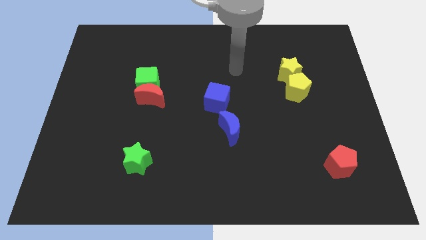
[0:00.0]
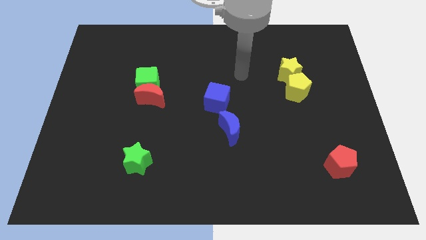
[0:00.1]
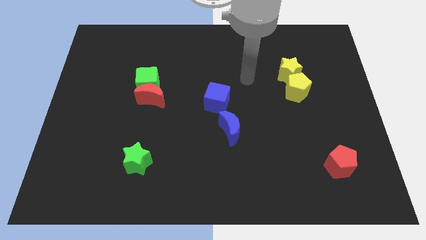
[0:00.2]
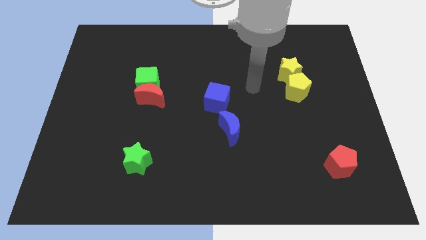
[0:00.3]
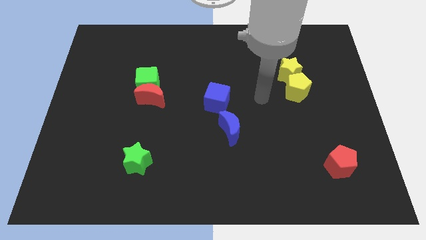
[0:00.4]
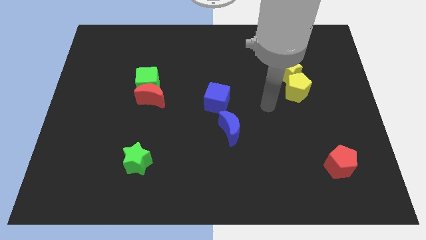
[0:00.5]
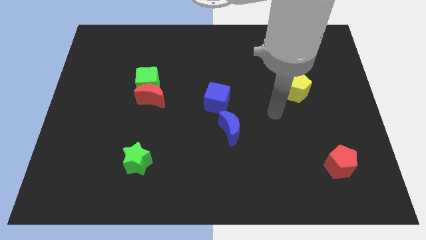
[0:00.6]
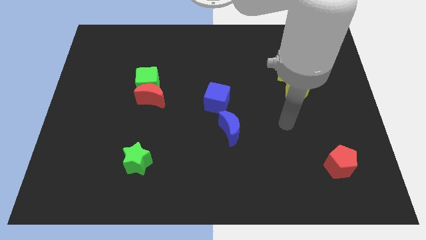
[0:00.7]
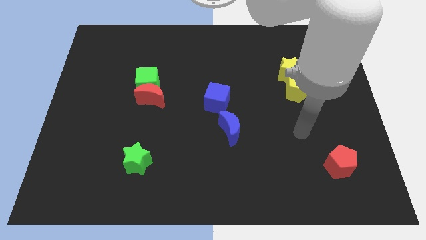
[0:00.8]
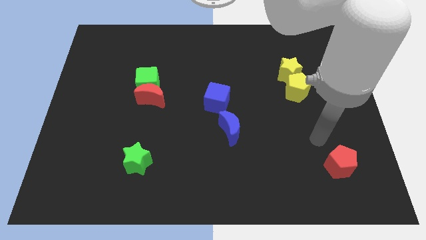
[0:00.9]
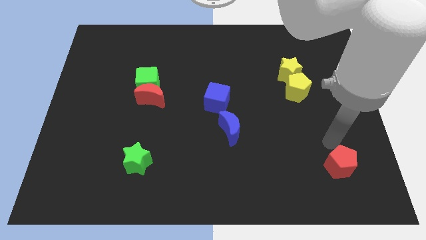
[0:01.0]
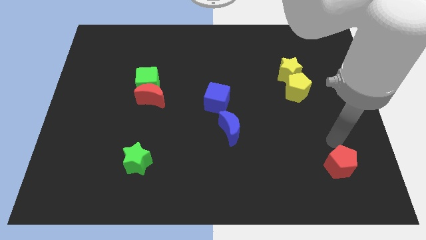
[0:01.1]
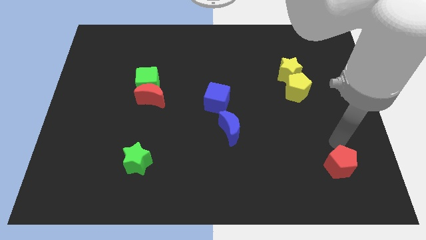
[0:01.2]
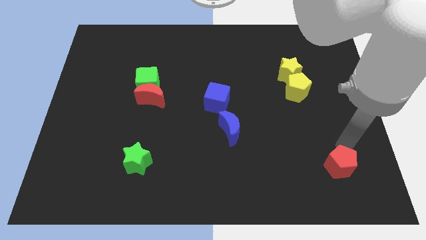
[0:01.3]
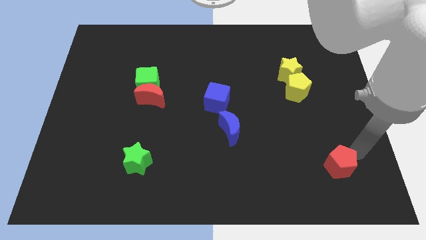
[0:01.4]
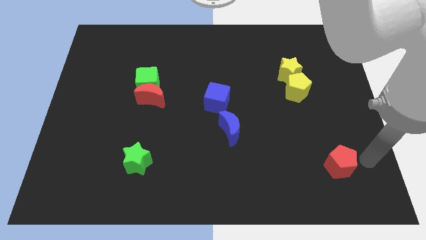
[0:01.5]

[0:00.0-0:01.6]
move the arm to the red pentagon

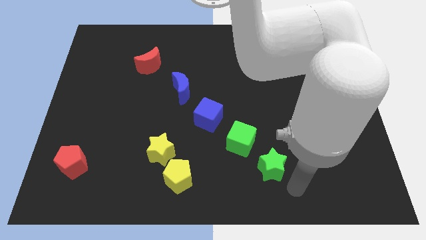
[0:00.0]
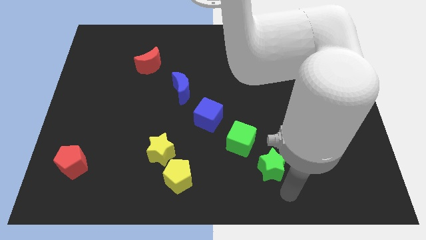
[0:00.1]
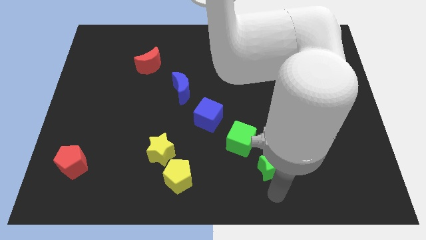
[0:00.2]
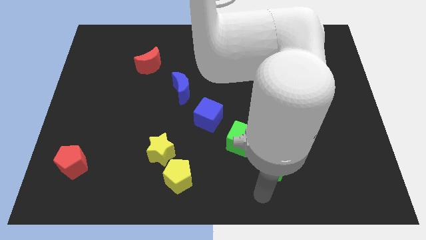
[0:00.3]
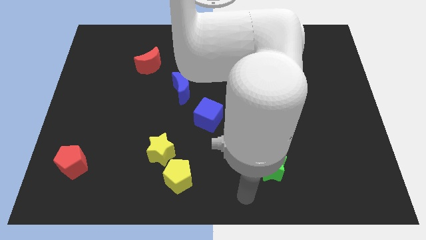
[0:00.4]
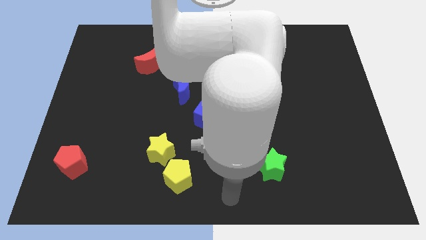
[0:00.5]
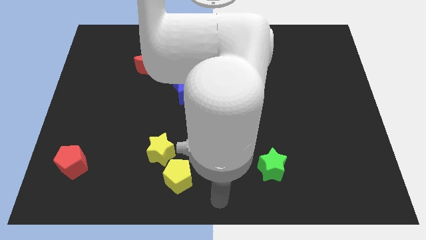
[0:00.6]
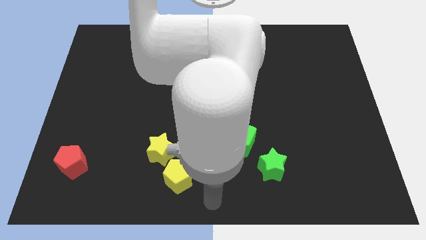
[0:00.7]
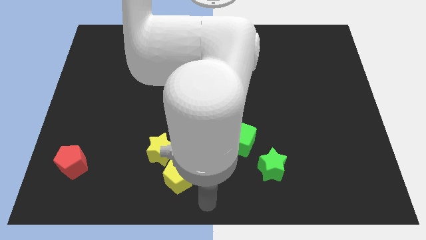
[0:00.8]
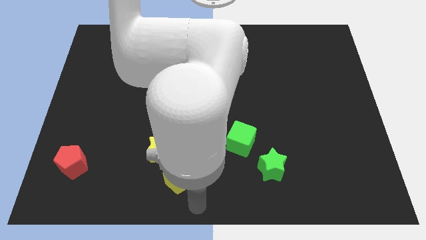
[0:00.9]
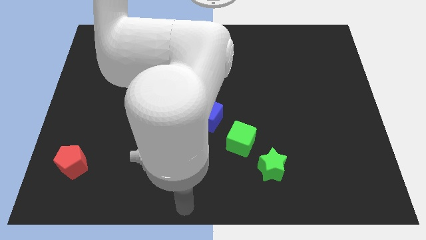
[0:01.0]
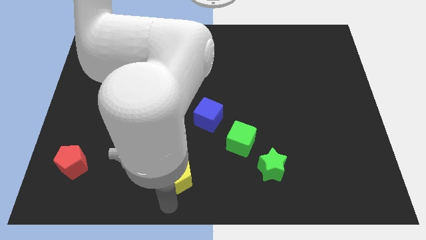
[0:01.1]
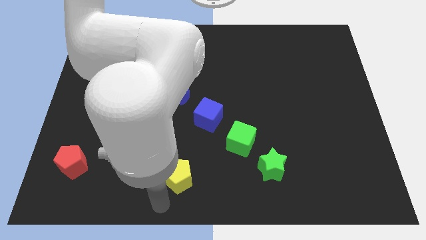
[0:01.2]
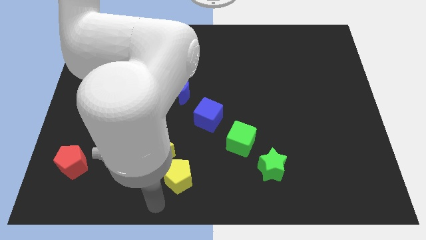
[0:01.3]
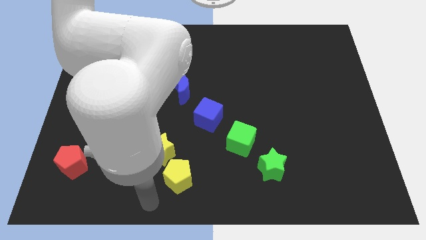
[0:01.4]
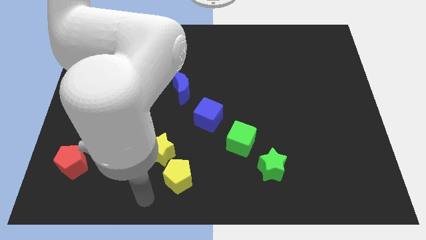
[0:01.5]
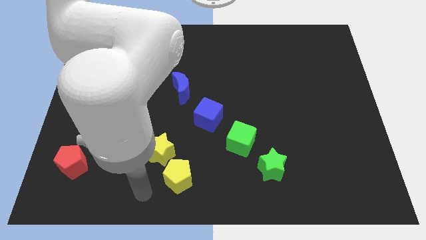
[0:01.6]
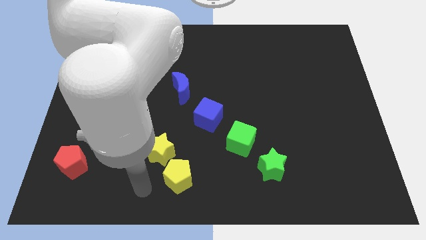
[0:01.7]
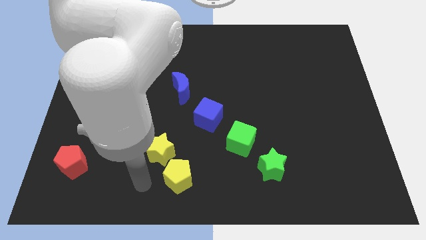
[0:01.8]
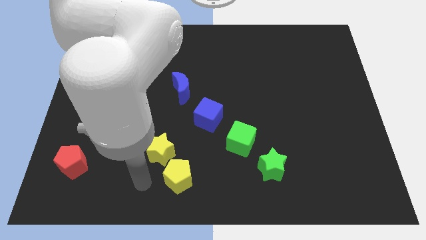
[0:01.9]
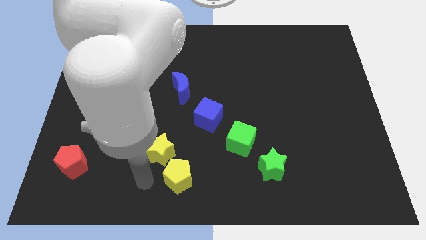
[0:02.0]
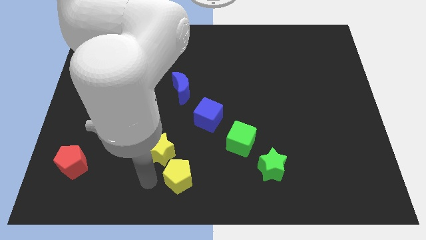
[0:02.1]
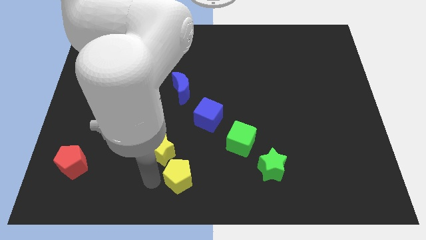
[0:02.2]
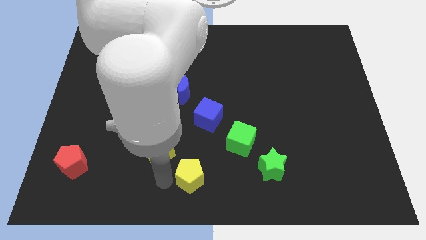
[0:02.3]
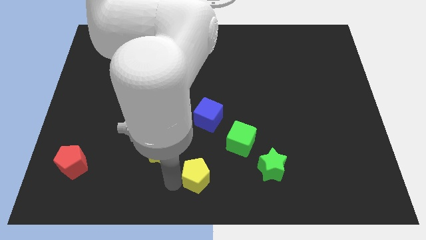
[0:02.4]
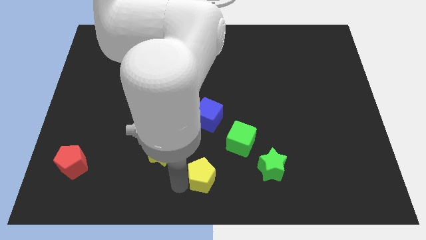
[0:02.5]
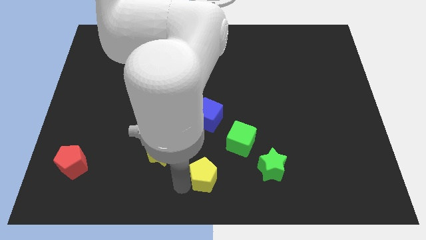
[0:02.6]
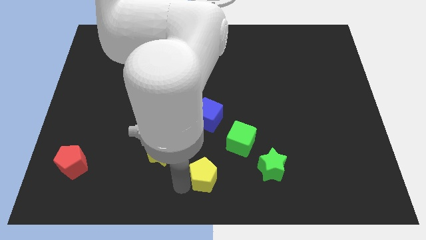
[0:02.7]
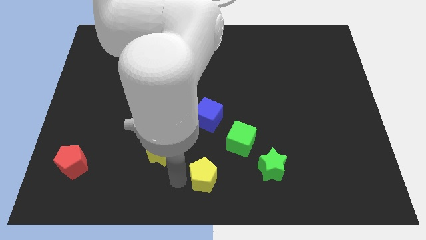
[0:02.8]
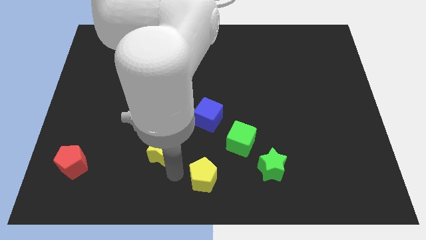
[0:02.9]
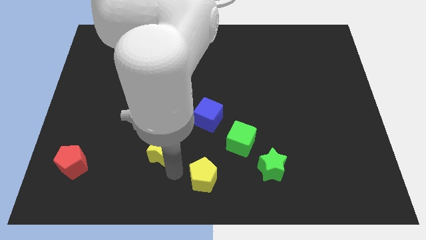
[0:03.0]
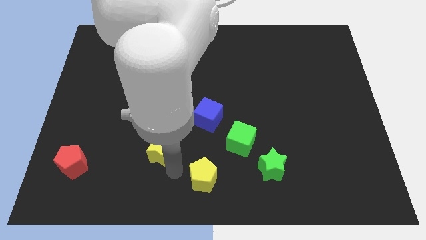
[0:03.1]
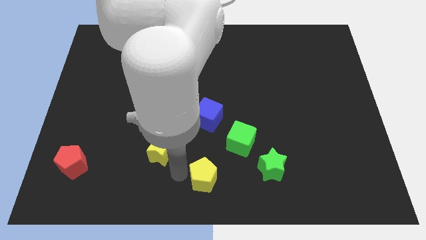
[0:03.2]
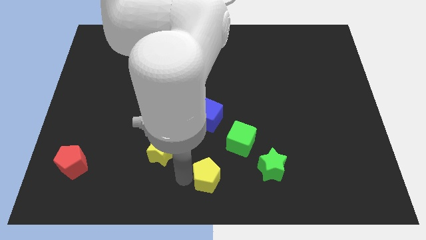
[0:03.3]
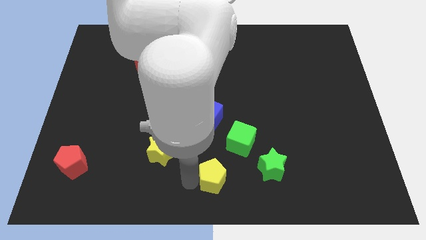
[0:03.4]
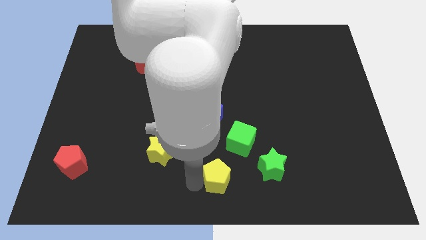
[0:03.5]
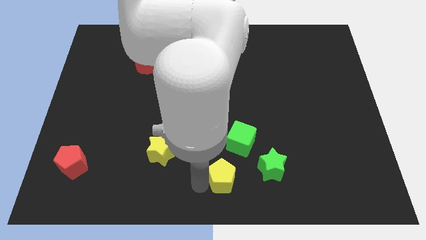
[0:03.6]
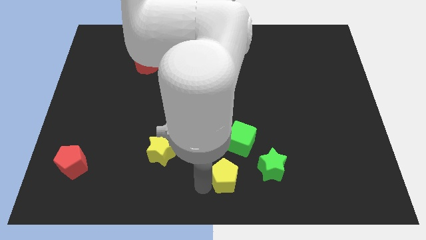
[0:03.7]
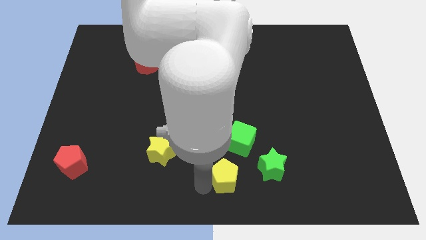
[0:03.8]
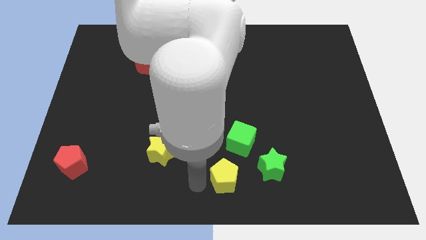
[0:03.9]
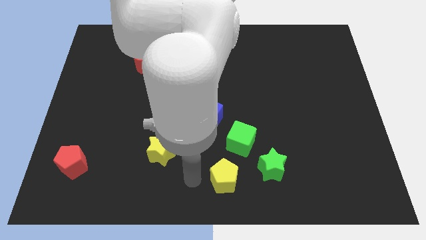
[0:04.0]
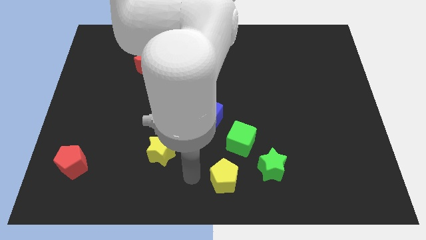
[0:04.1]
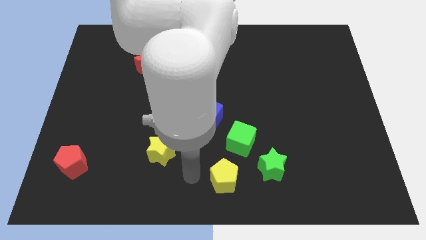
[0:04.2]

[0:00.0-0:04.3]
move the yellow pentagon away from the yellow star

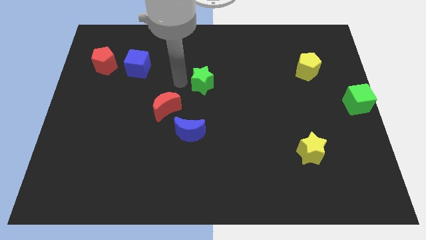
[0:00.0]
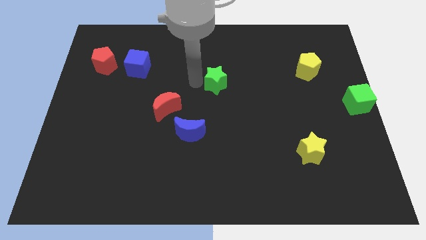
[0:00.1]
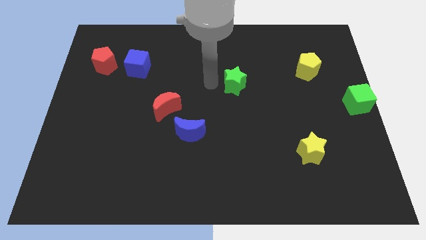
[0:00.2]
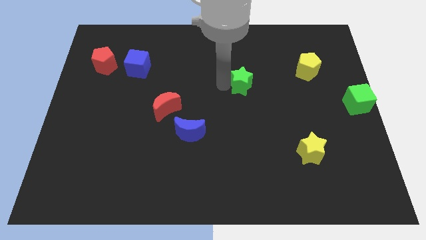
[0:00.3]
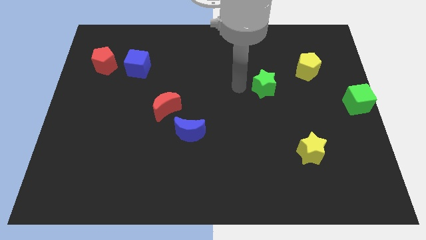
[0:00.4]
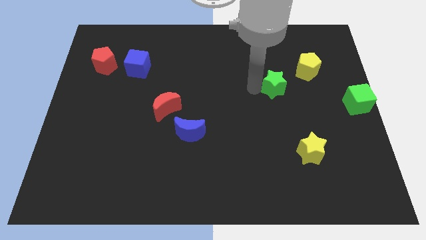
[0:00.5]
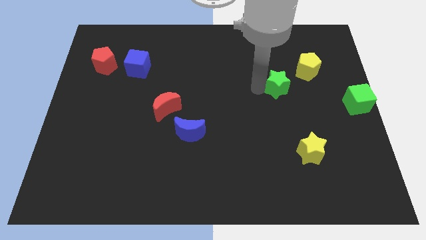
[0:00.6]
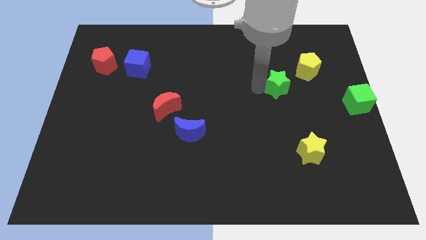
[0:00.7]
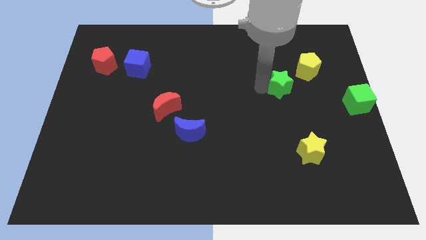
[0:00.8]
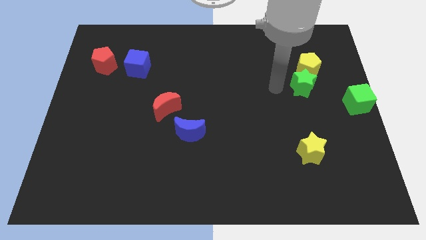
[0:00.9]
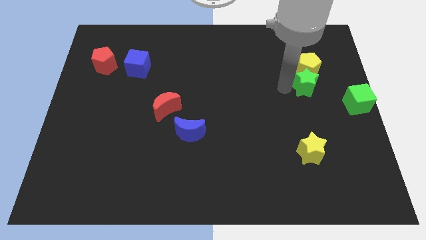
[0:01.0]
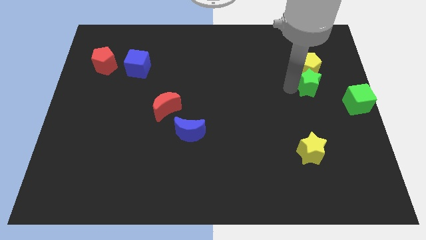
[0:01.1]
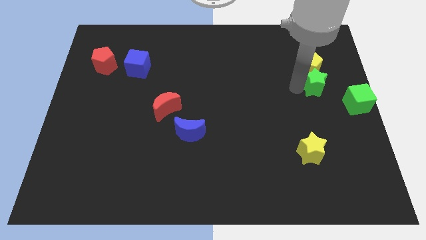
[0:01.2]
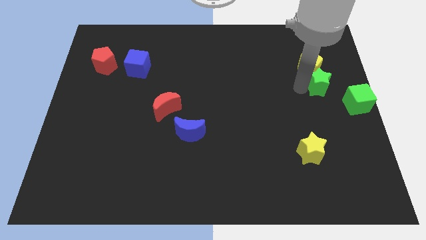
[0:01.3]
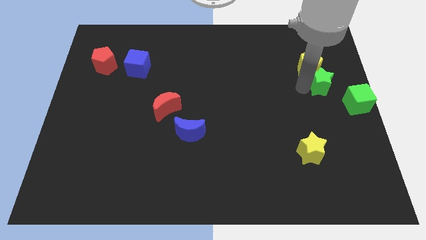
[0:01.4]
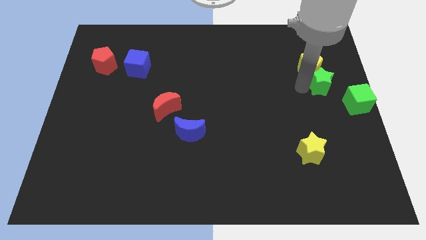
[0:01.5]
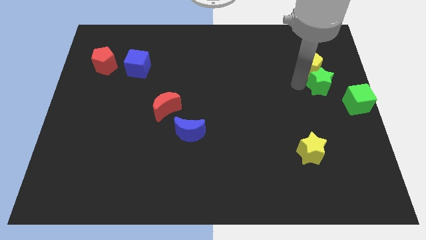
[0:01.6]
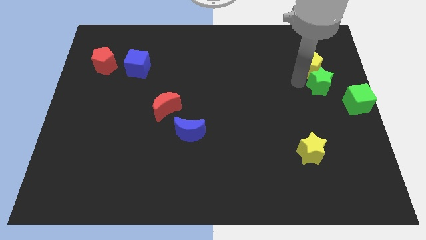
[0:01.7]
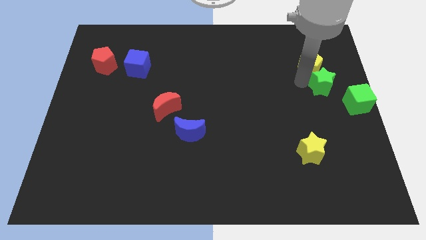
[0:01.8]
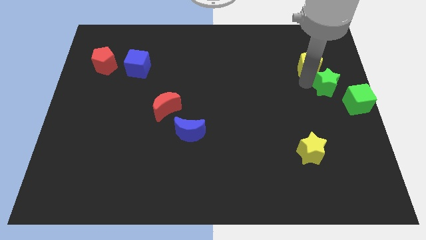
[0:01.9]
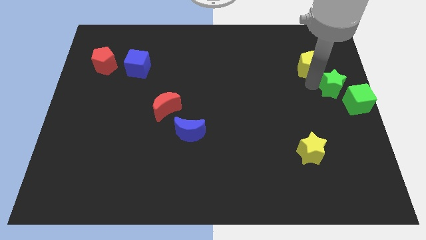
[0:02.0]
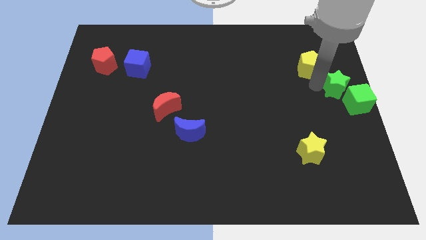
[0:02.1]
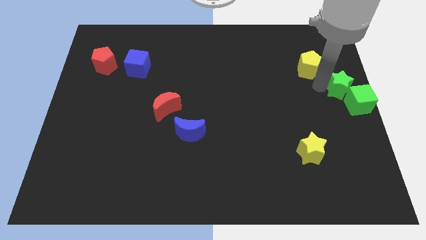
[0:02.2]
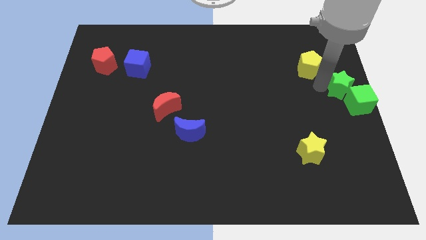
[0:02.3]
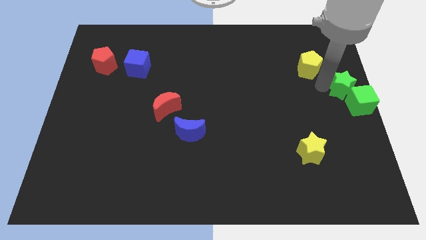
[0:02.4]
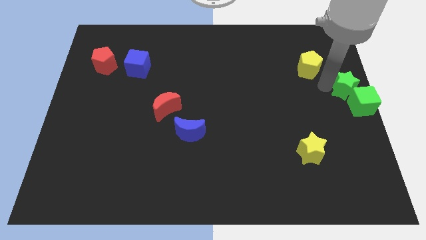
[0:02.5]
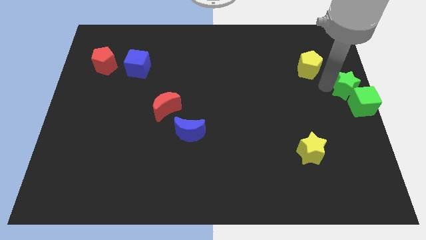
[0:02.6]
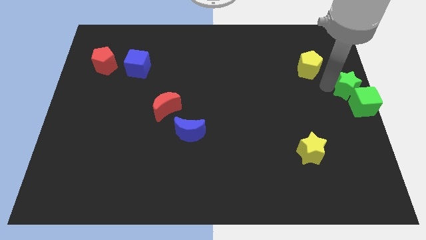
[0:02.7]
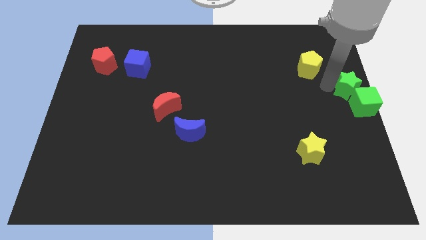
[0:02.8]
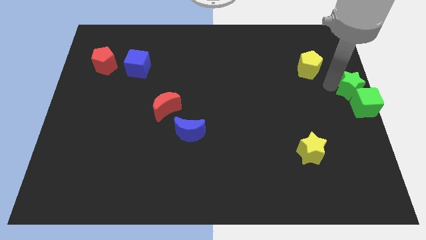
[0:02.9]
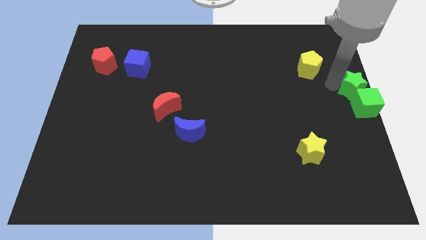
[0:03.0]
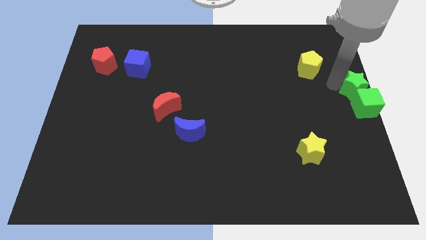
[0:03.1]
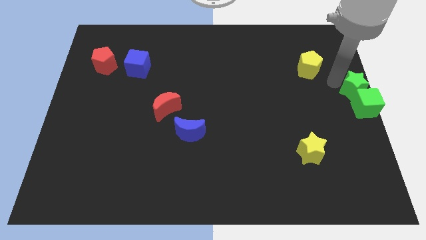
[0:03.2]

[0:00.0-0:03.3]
place the green things together at the center right side of the board
